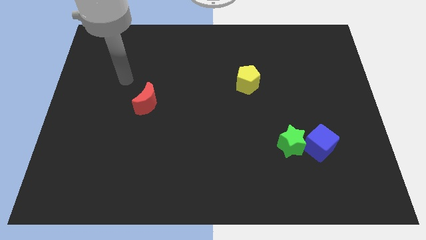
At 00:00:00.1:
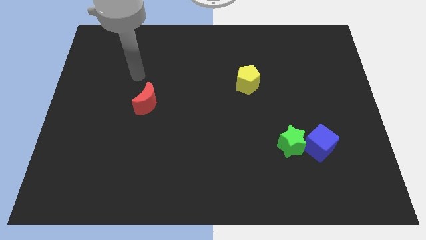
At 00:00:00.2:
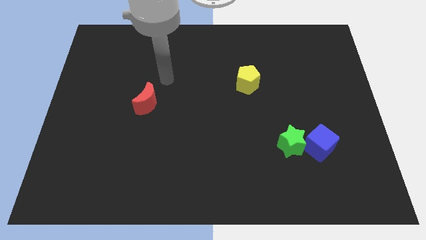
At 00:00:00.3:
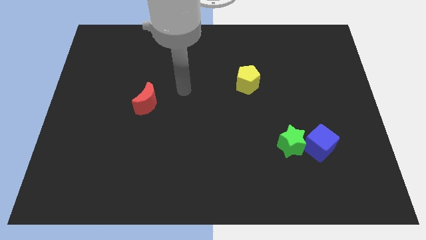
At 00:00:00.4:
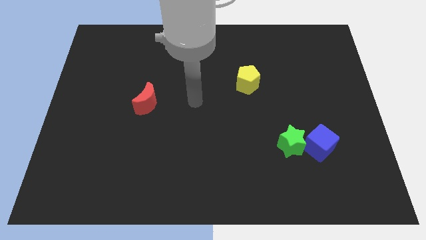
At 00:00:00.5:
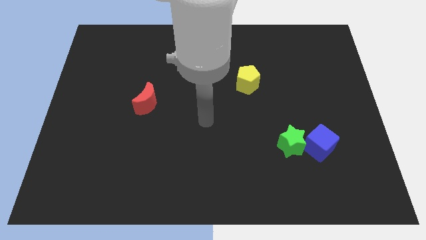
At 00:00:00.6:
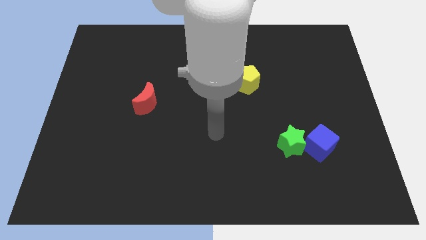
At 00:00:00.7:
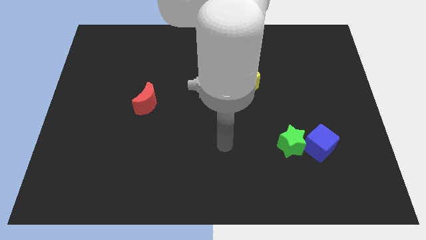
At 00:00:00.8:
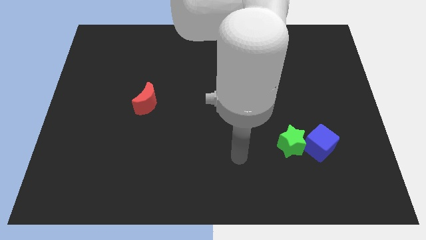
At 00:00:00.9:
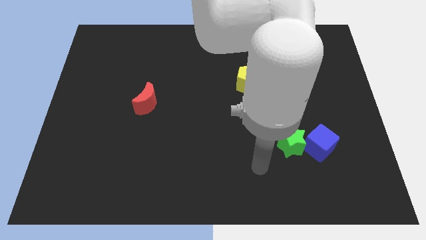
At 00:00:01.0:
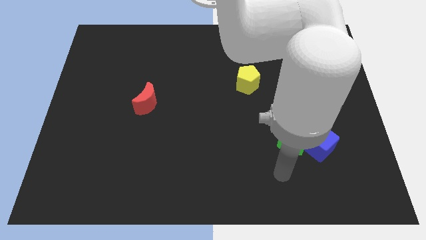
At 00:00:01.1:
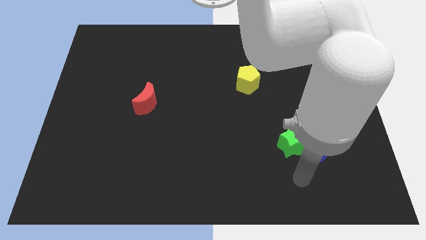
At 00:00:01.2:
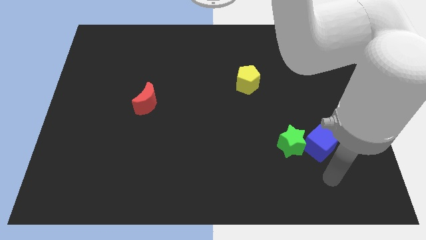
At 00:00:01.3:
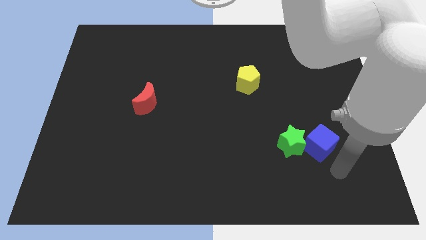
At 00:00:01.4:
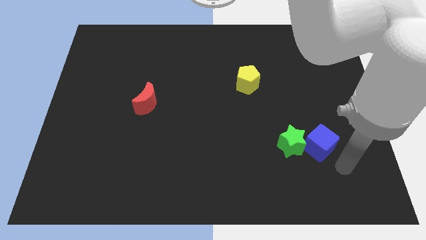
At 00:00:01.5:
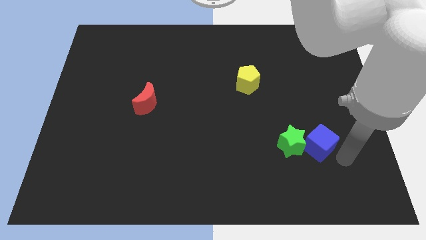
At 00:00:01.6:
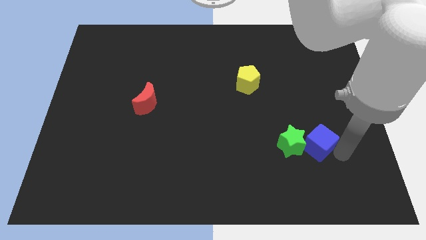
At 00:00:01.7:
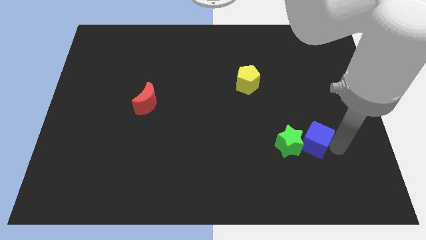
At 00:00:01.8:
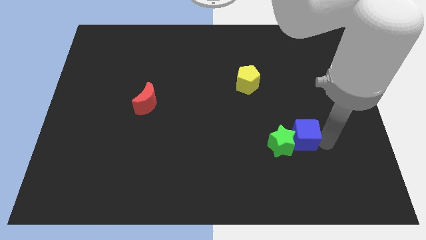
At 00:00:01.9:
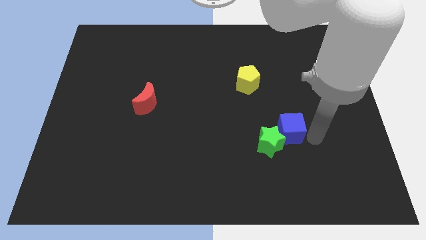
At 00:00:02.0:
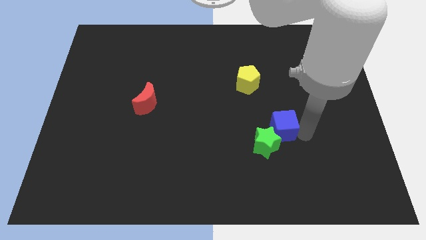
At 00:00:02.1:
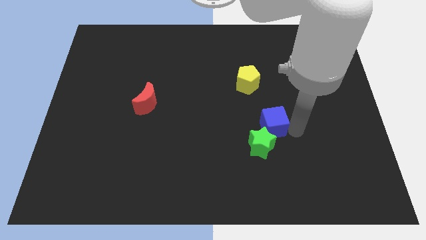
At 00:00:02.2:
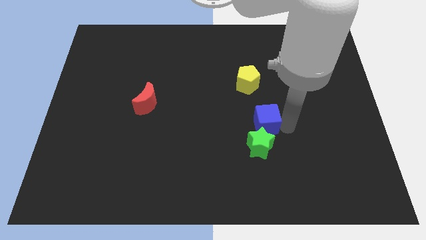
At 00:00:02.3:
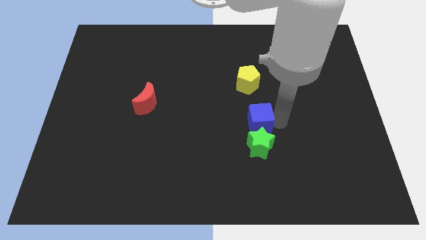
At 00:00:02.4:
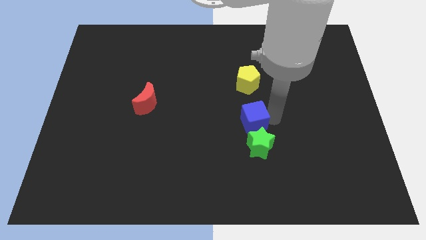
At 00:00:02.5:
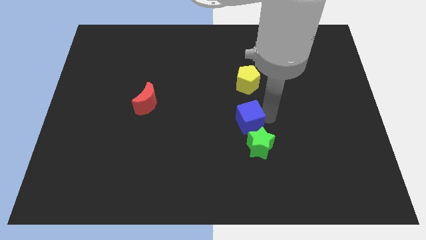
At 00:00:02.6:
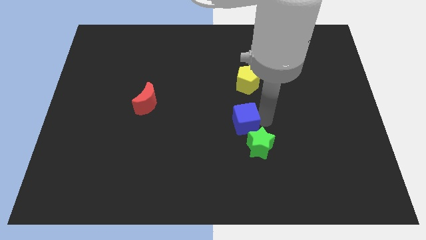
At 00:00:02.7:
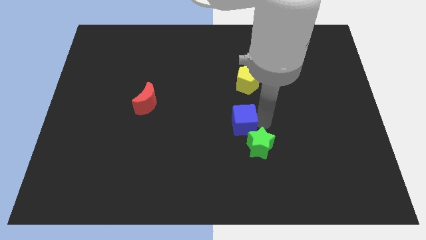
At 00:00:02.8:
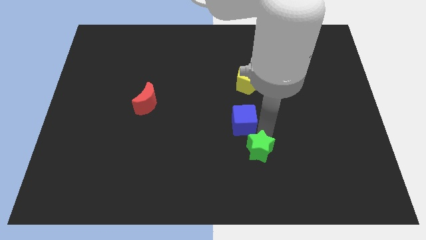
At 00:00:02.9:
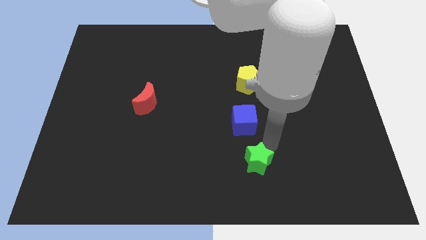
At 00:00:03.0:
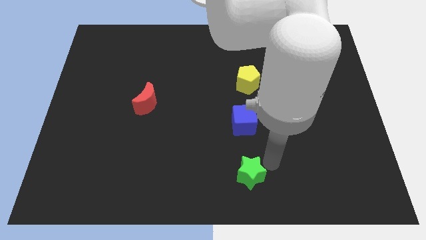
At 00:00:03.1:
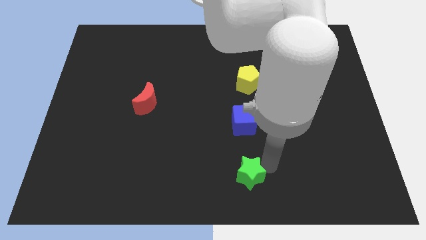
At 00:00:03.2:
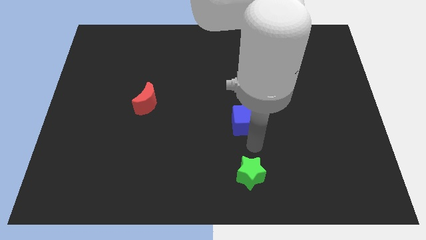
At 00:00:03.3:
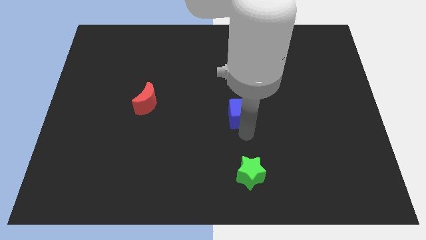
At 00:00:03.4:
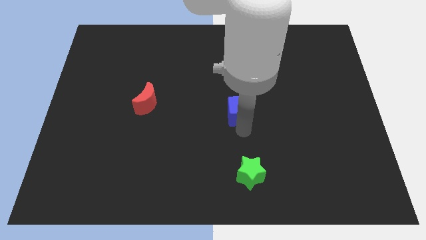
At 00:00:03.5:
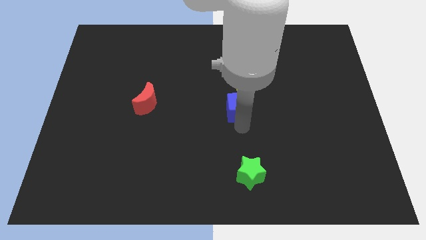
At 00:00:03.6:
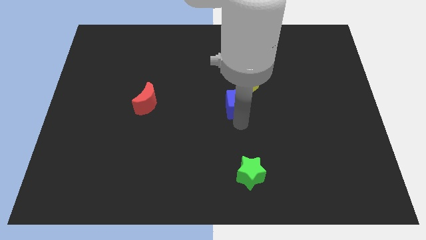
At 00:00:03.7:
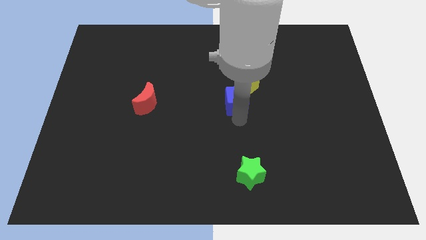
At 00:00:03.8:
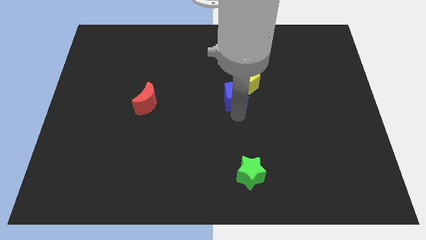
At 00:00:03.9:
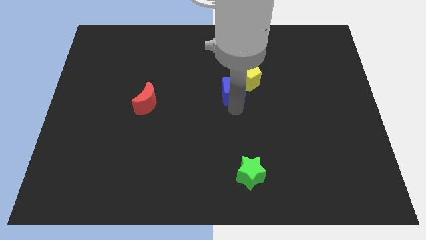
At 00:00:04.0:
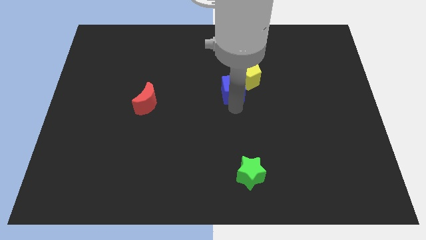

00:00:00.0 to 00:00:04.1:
push the blue block towards the yellow pentagon

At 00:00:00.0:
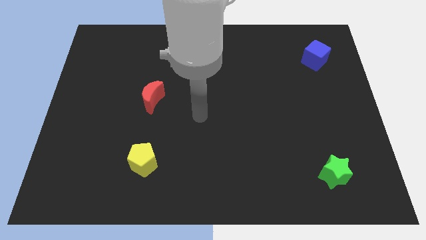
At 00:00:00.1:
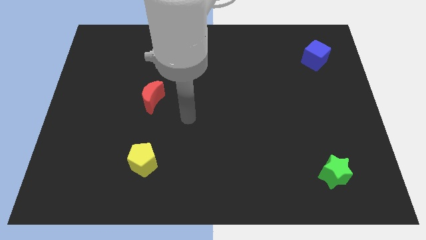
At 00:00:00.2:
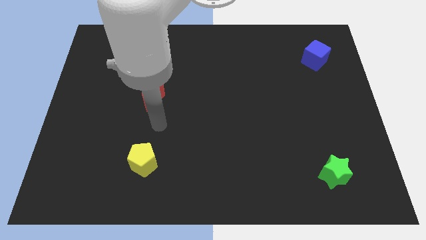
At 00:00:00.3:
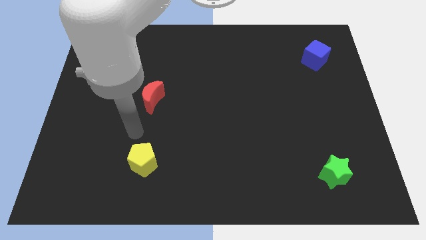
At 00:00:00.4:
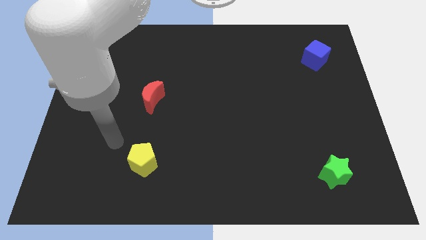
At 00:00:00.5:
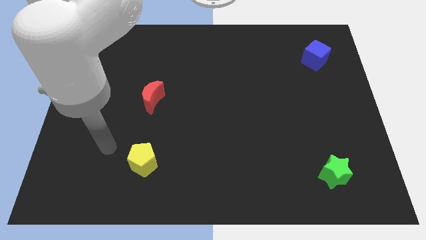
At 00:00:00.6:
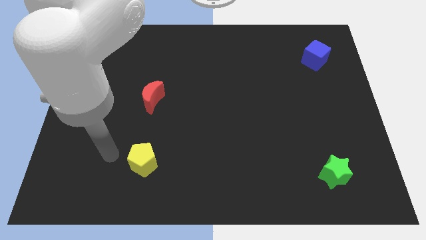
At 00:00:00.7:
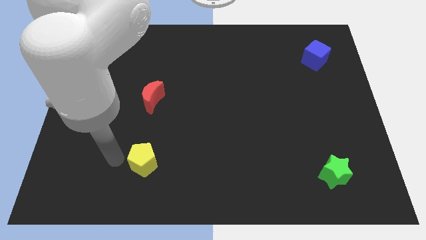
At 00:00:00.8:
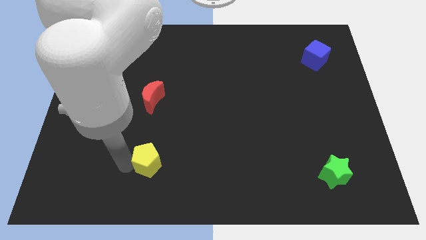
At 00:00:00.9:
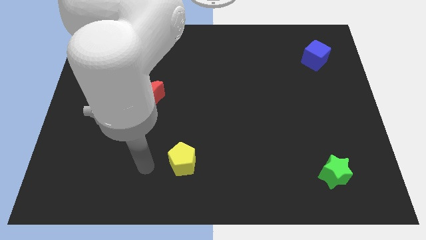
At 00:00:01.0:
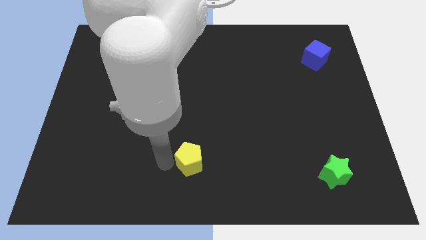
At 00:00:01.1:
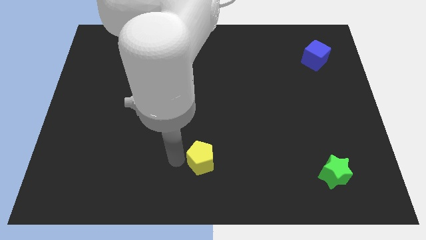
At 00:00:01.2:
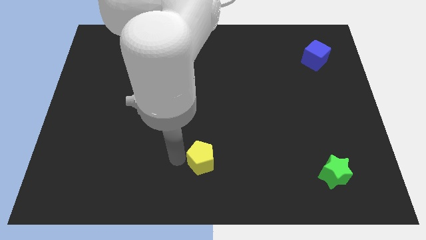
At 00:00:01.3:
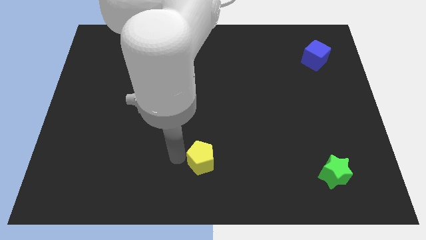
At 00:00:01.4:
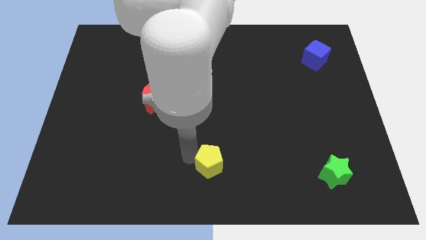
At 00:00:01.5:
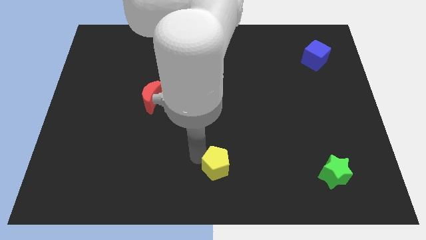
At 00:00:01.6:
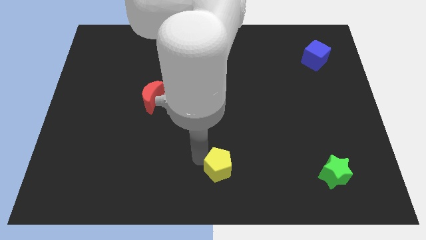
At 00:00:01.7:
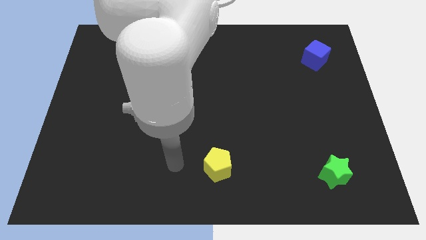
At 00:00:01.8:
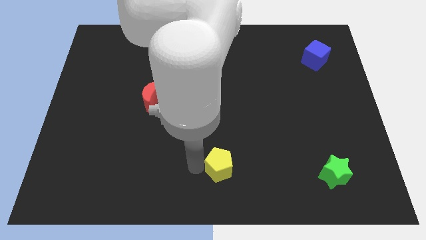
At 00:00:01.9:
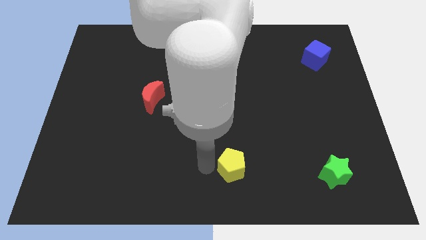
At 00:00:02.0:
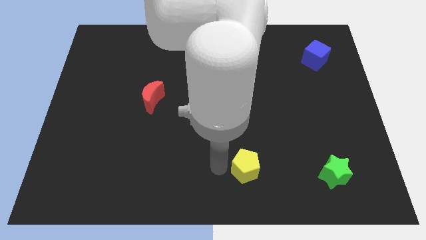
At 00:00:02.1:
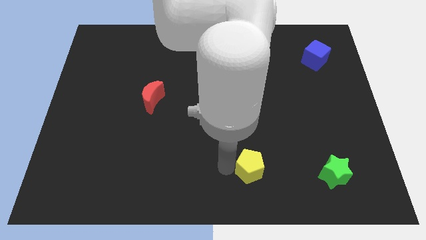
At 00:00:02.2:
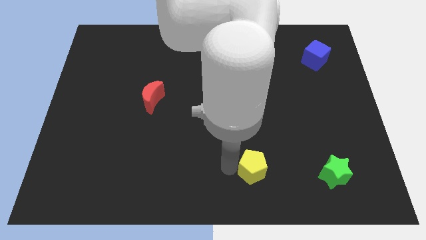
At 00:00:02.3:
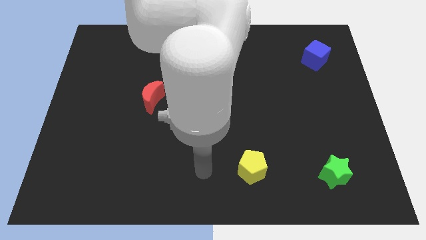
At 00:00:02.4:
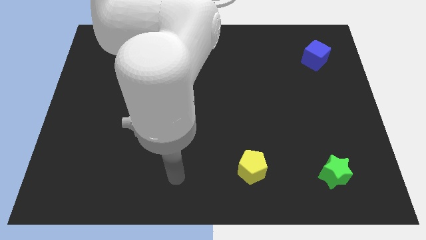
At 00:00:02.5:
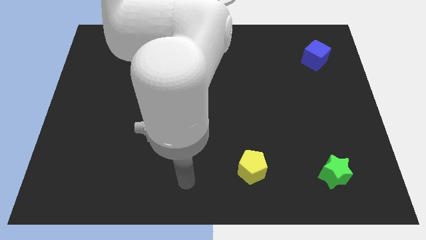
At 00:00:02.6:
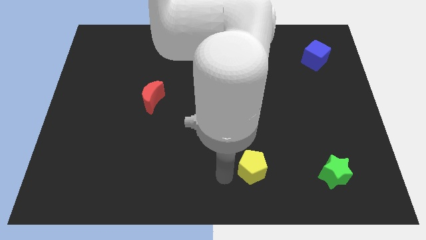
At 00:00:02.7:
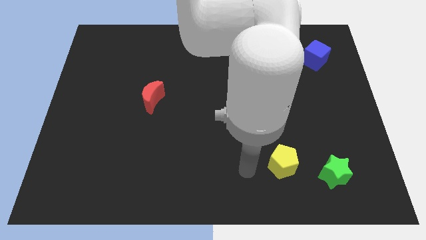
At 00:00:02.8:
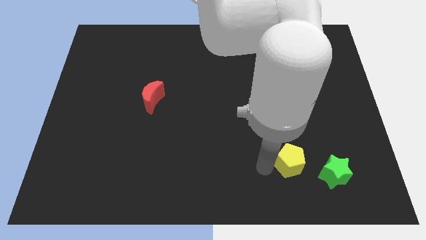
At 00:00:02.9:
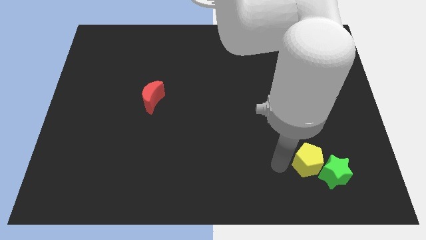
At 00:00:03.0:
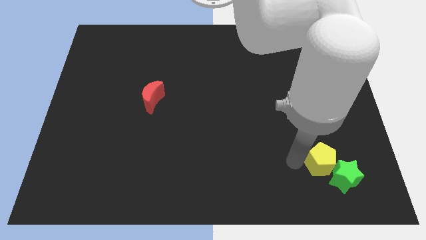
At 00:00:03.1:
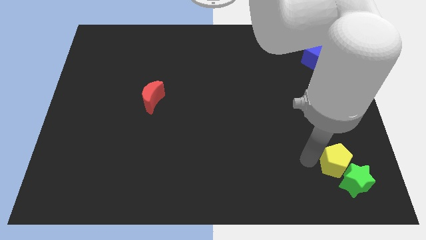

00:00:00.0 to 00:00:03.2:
put the yellow pentagon towards the star

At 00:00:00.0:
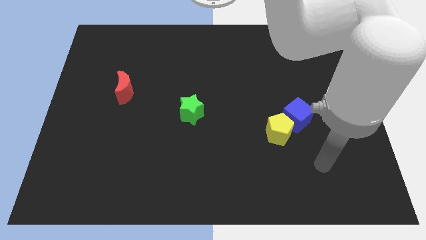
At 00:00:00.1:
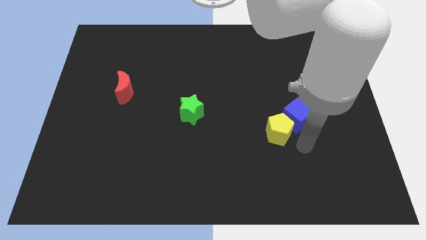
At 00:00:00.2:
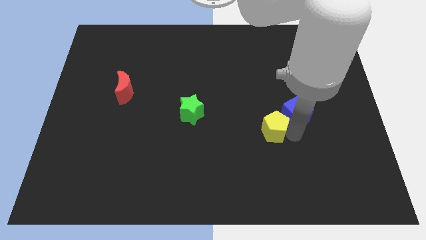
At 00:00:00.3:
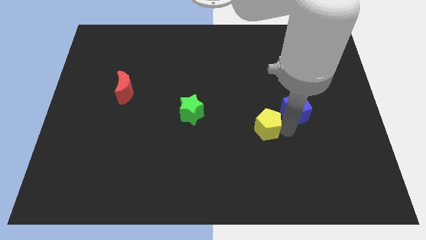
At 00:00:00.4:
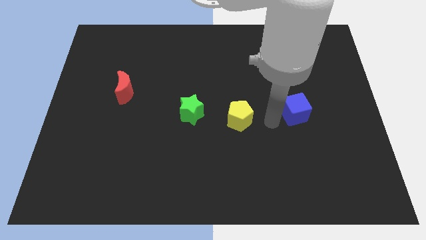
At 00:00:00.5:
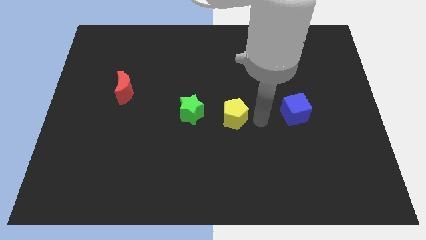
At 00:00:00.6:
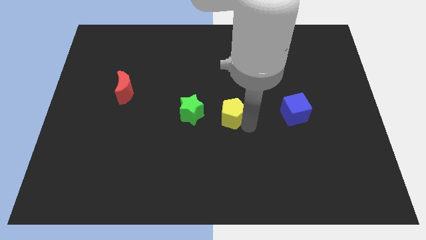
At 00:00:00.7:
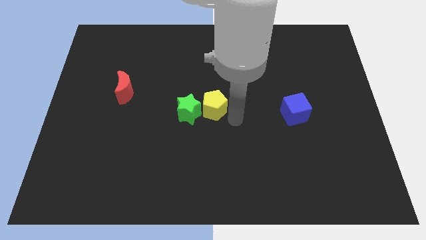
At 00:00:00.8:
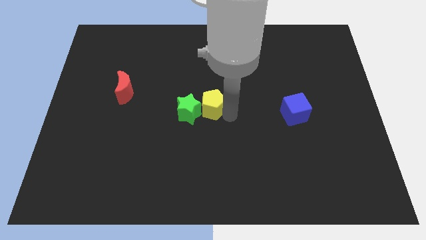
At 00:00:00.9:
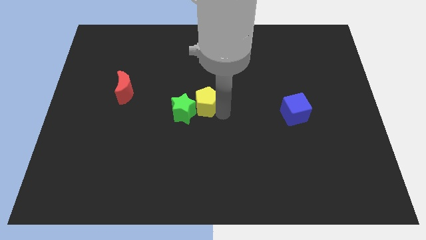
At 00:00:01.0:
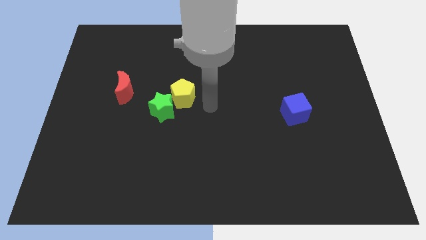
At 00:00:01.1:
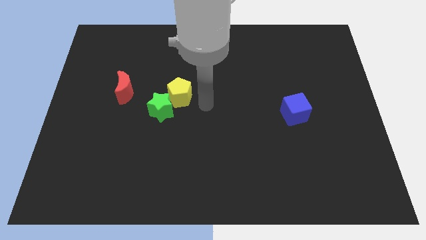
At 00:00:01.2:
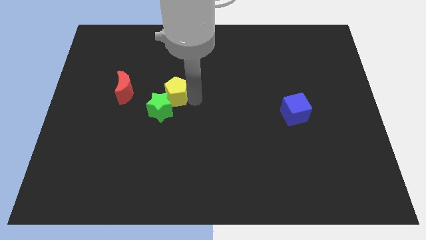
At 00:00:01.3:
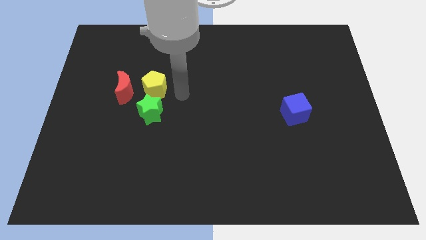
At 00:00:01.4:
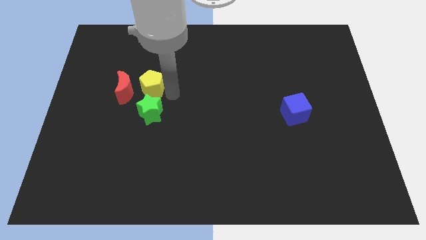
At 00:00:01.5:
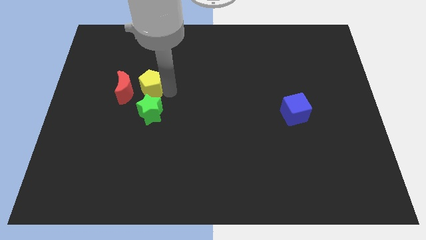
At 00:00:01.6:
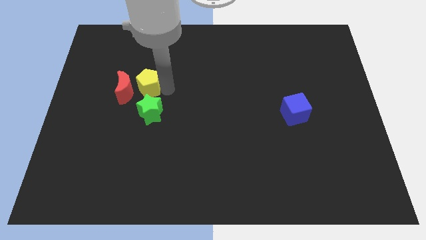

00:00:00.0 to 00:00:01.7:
slide the yellow block close to the red moon
